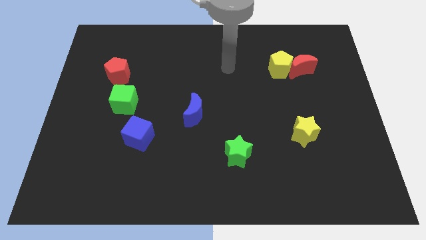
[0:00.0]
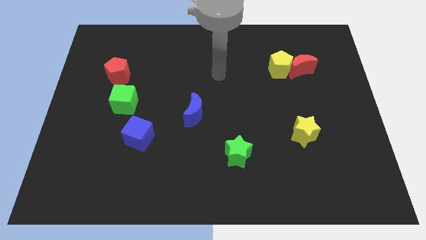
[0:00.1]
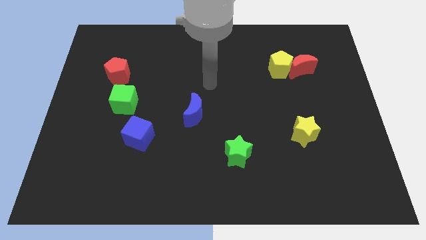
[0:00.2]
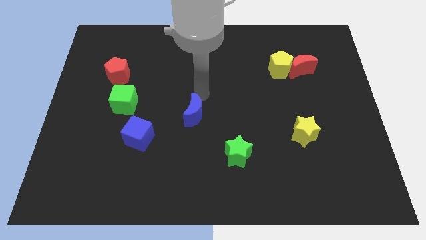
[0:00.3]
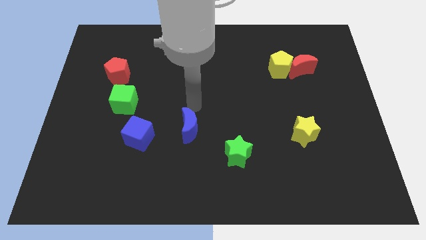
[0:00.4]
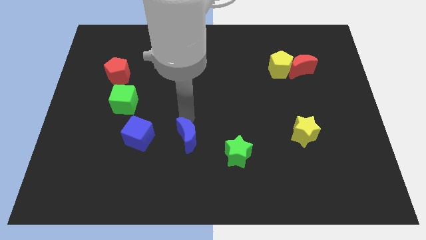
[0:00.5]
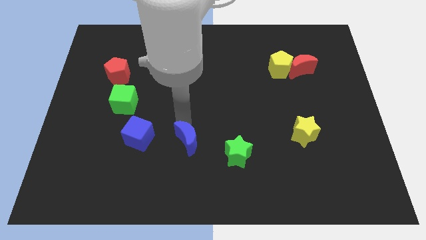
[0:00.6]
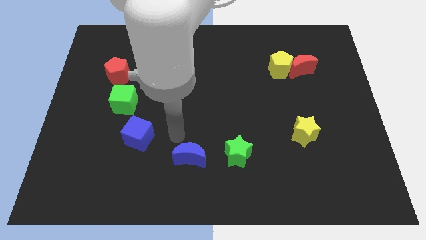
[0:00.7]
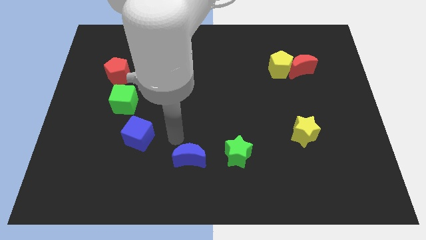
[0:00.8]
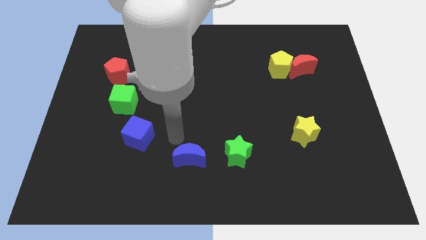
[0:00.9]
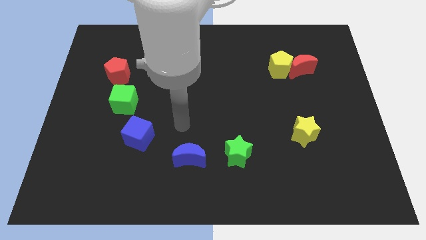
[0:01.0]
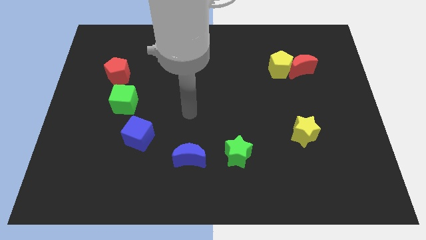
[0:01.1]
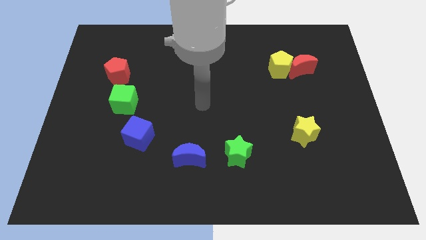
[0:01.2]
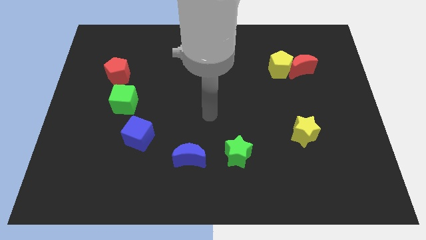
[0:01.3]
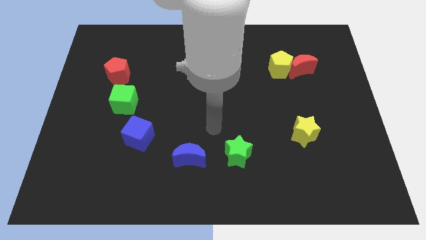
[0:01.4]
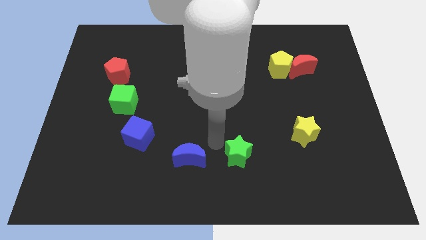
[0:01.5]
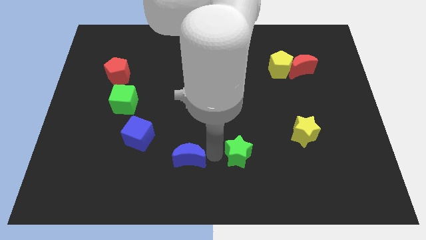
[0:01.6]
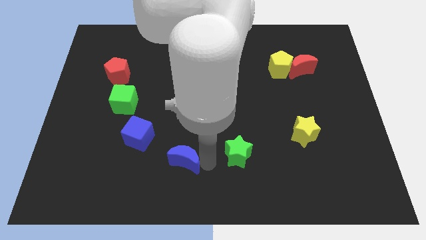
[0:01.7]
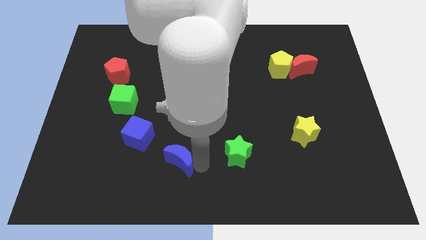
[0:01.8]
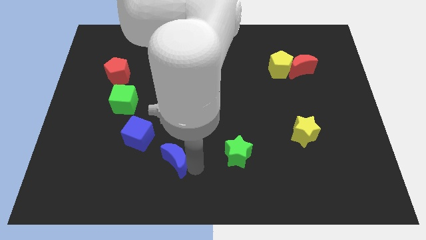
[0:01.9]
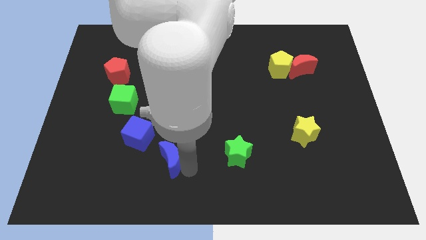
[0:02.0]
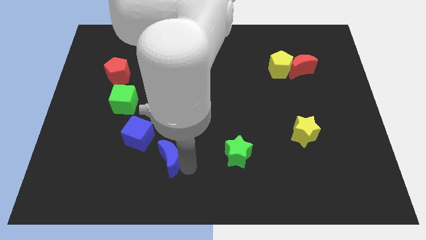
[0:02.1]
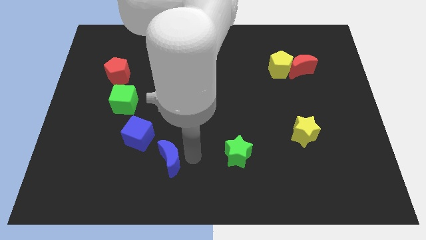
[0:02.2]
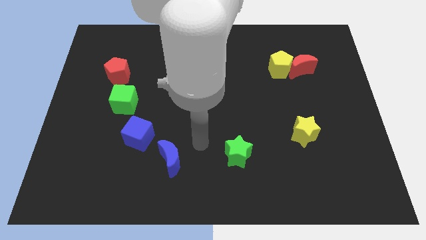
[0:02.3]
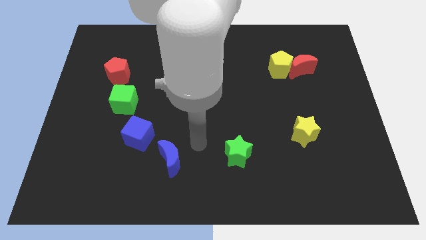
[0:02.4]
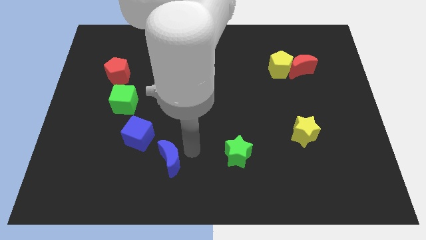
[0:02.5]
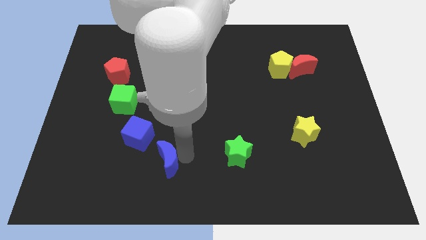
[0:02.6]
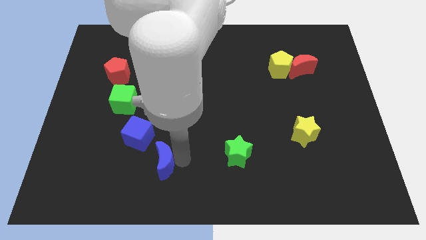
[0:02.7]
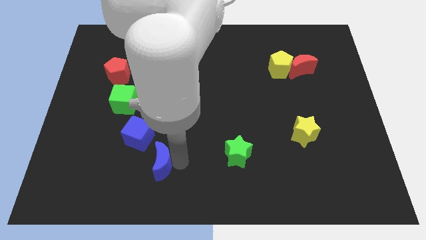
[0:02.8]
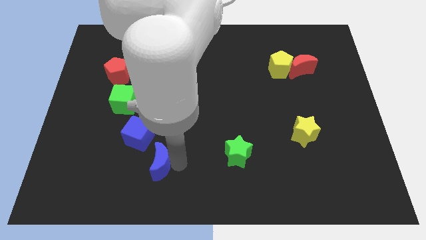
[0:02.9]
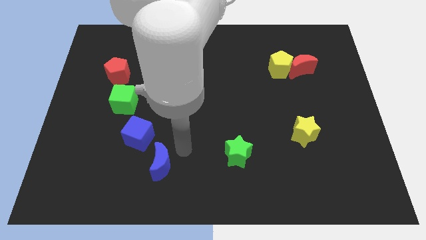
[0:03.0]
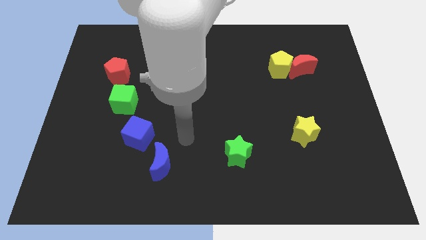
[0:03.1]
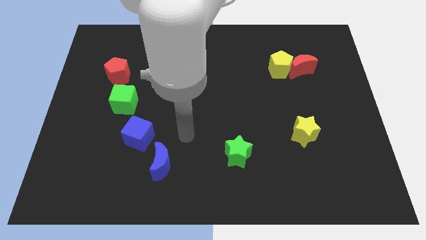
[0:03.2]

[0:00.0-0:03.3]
push the blue crescent to the bottom right of the blue cube

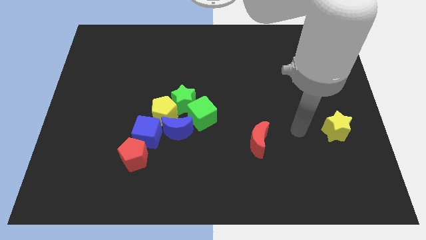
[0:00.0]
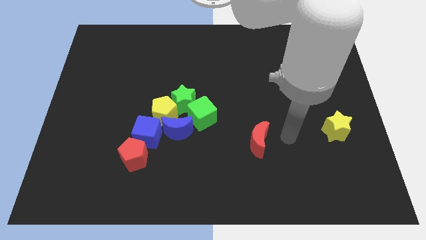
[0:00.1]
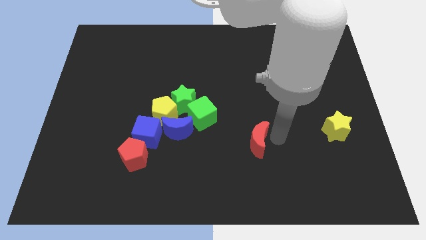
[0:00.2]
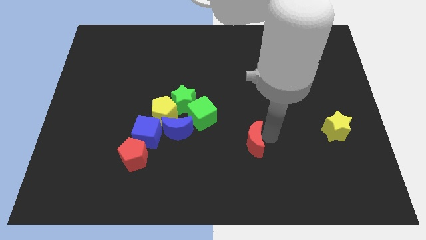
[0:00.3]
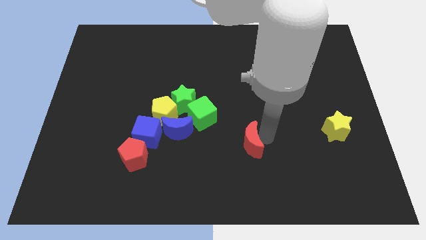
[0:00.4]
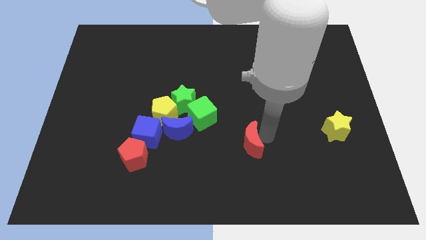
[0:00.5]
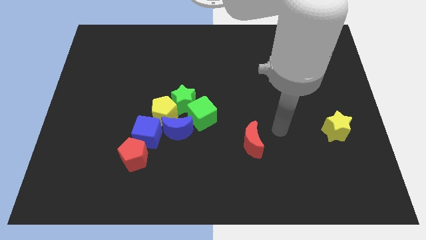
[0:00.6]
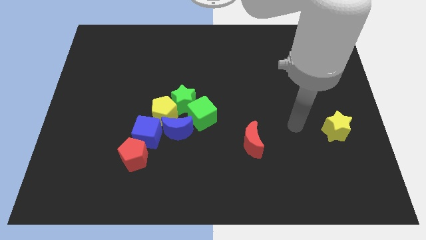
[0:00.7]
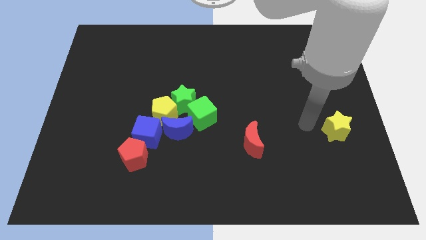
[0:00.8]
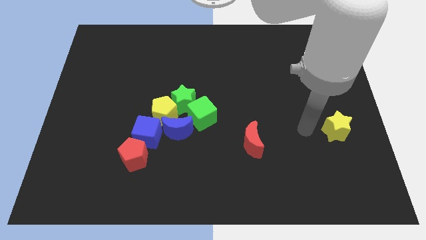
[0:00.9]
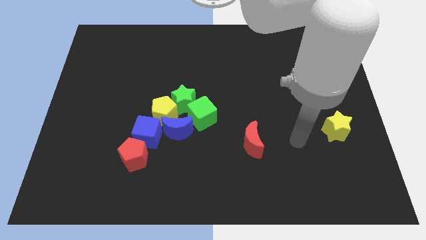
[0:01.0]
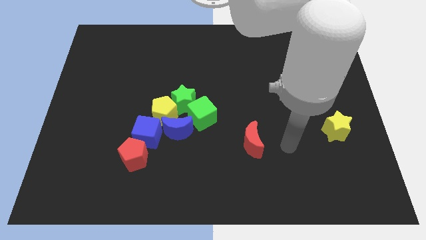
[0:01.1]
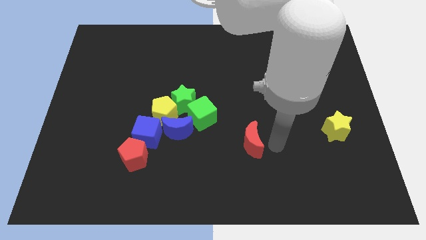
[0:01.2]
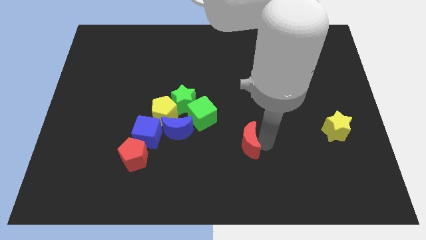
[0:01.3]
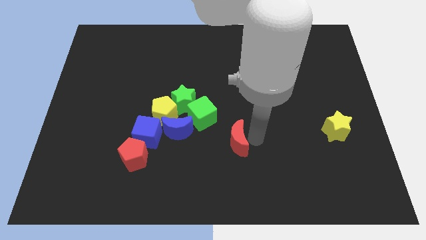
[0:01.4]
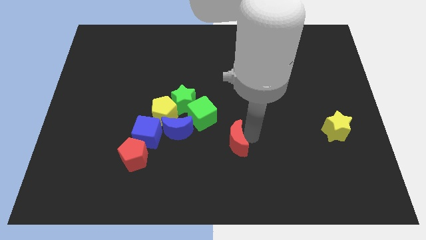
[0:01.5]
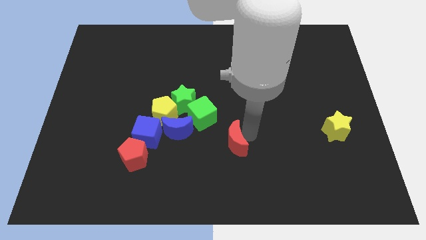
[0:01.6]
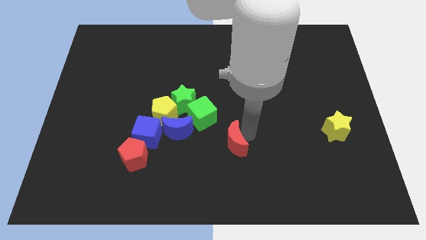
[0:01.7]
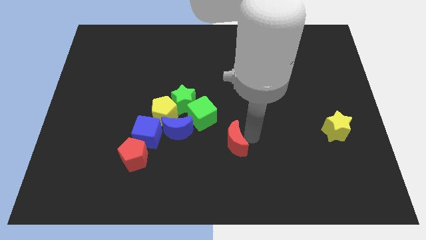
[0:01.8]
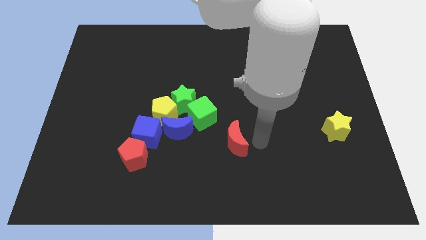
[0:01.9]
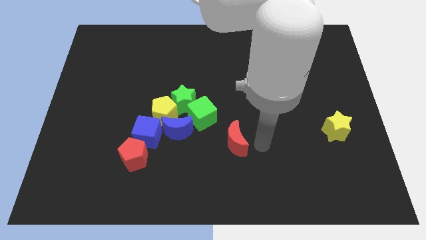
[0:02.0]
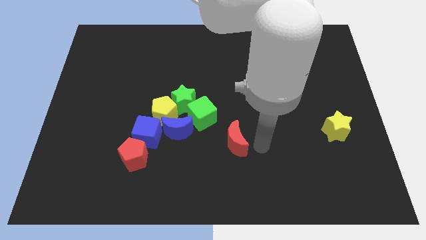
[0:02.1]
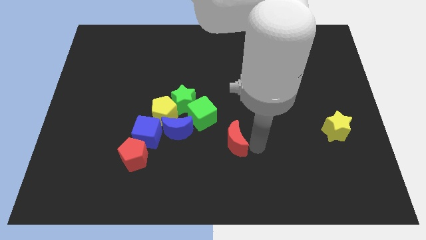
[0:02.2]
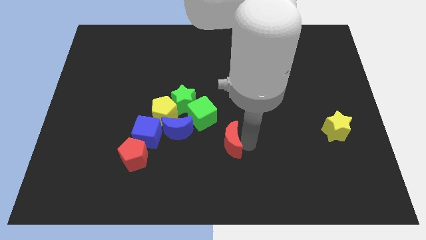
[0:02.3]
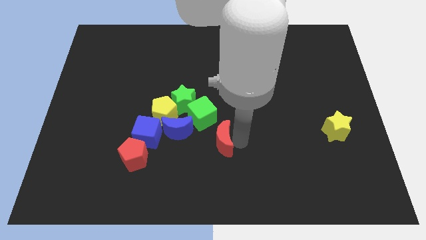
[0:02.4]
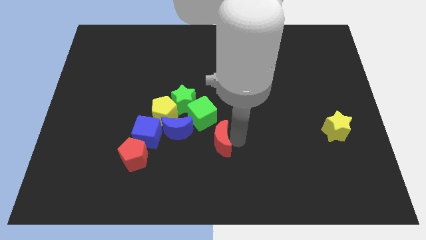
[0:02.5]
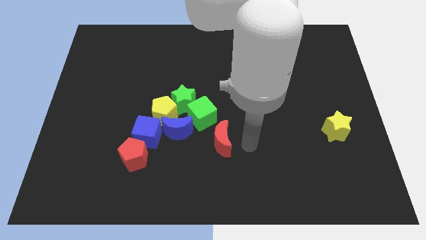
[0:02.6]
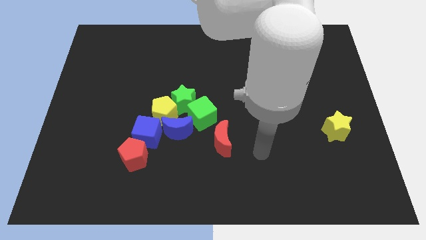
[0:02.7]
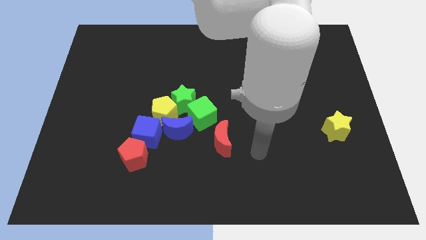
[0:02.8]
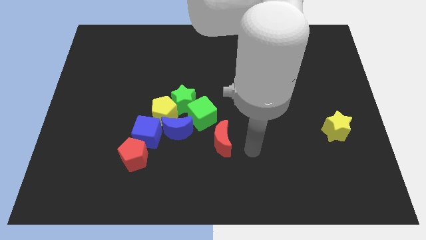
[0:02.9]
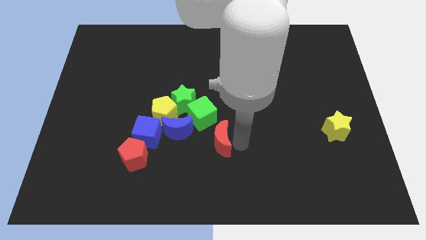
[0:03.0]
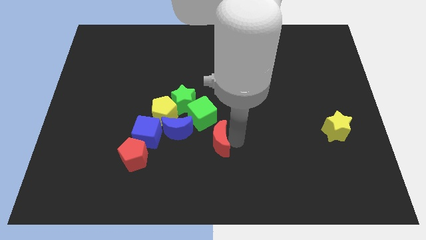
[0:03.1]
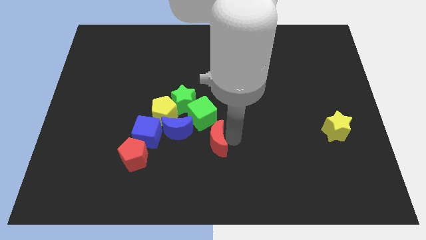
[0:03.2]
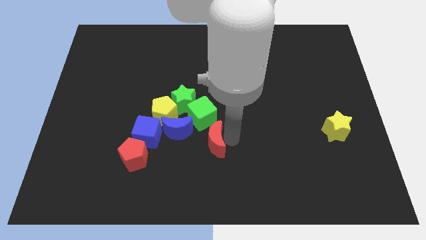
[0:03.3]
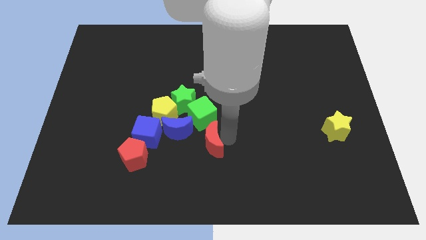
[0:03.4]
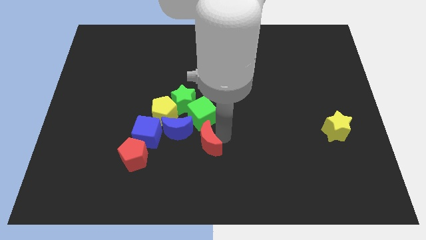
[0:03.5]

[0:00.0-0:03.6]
push the red crescent to the bottom right side of the green cube

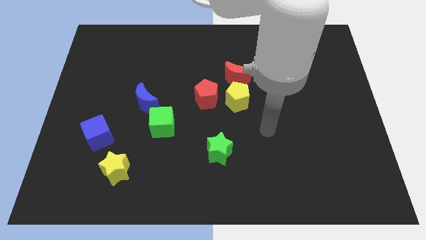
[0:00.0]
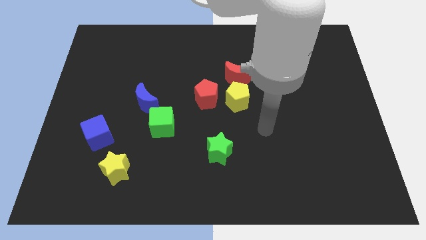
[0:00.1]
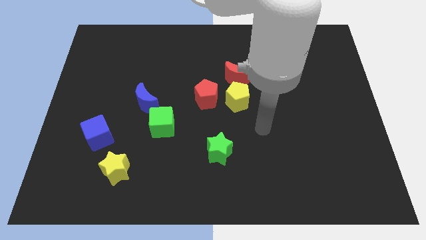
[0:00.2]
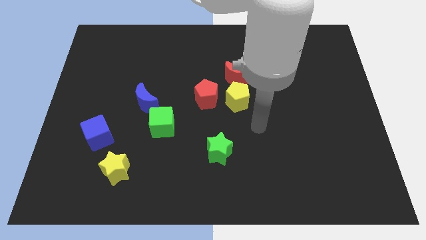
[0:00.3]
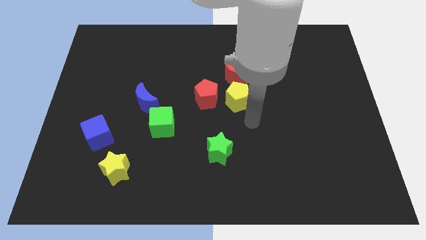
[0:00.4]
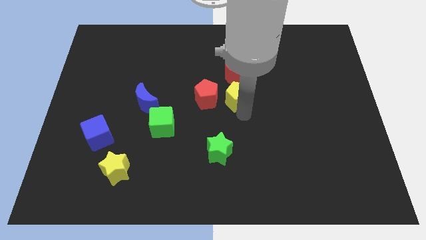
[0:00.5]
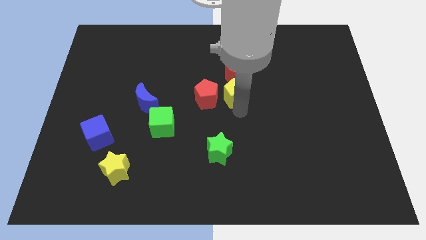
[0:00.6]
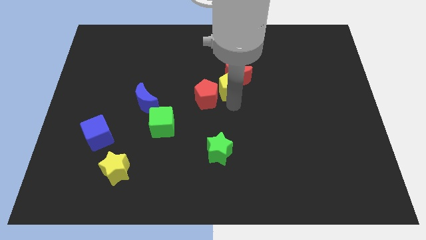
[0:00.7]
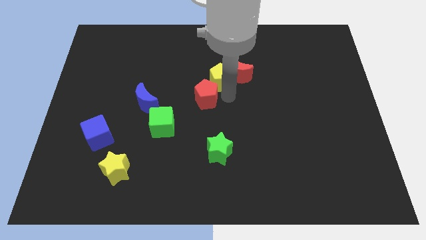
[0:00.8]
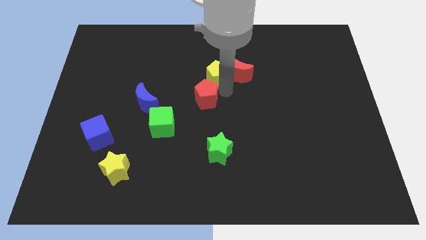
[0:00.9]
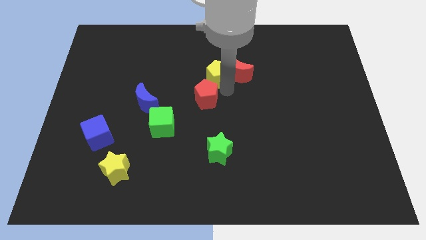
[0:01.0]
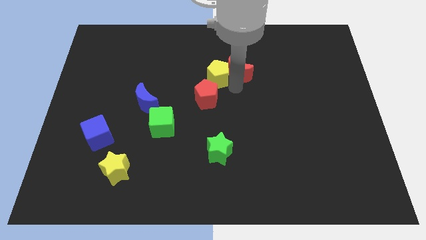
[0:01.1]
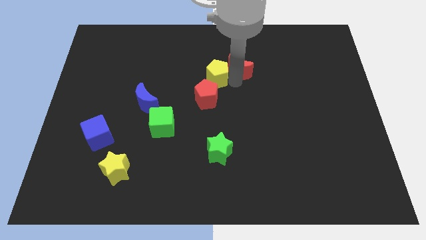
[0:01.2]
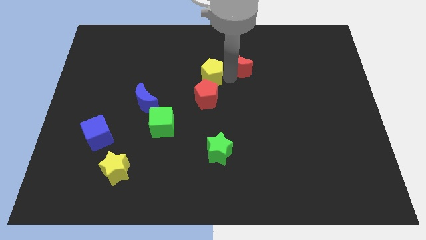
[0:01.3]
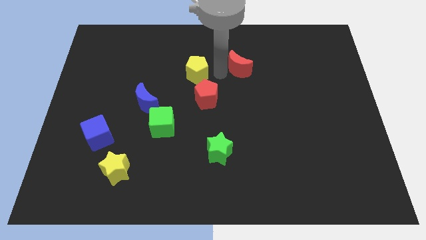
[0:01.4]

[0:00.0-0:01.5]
push yellow star above red pentagon

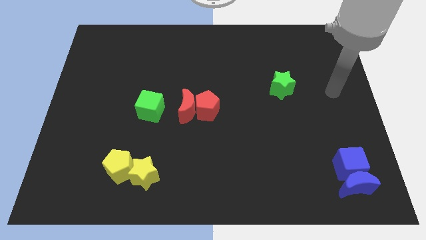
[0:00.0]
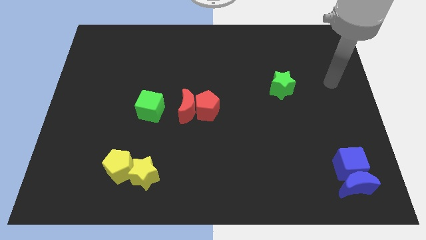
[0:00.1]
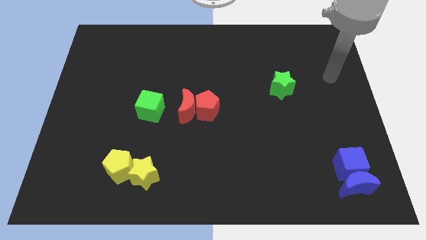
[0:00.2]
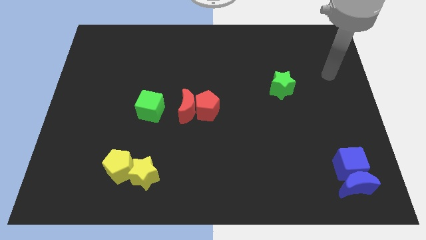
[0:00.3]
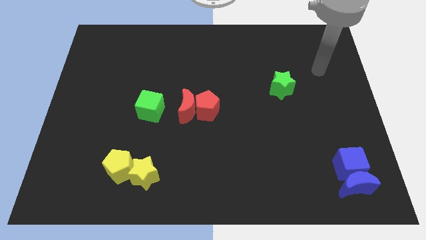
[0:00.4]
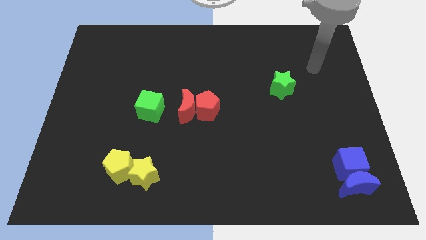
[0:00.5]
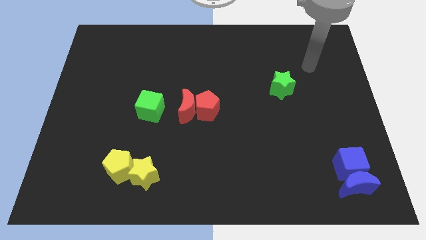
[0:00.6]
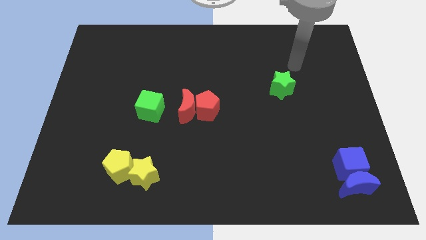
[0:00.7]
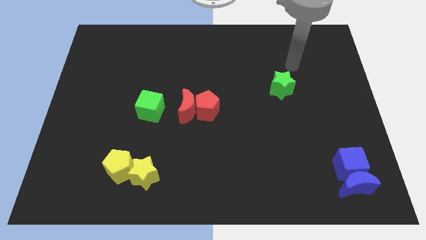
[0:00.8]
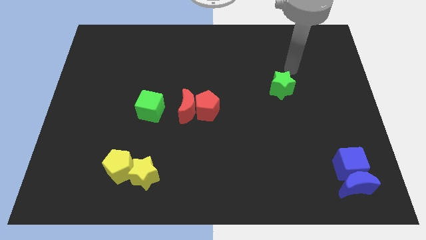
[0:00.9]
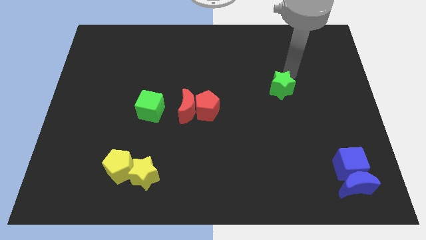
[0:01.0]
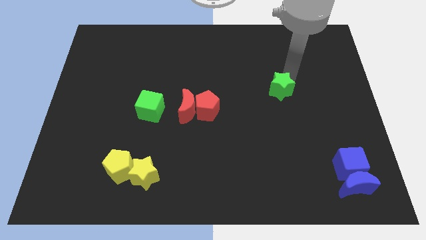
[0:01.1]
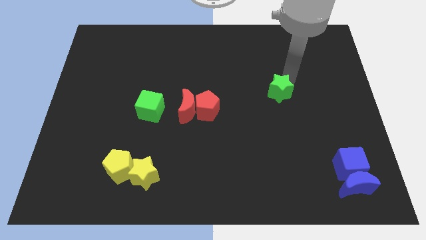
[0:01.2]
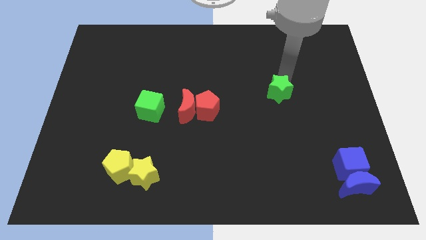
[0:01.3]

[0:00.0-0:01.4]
touch the green star
